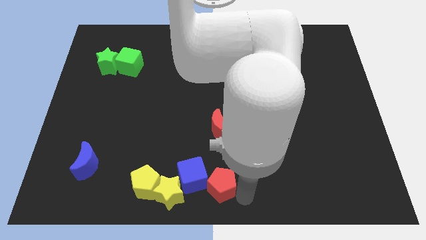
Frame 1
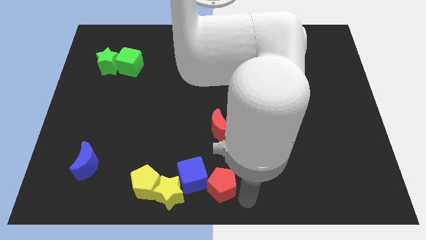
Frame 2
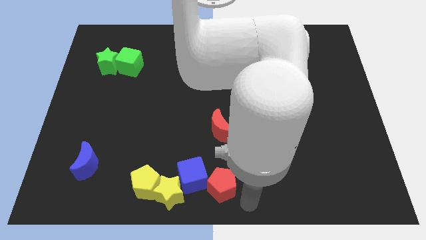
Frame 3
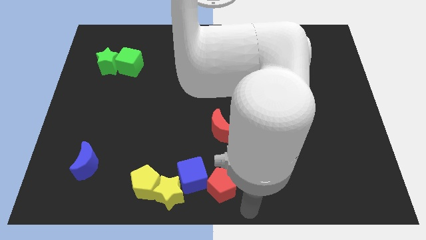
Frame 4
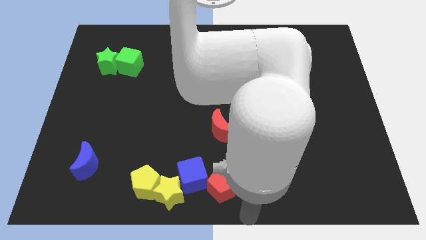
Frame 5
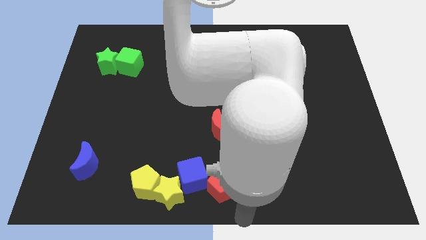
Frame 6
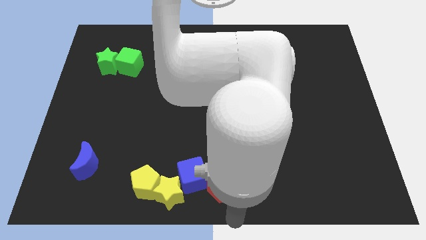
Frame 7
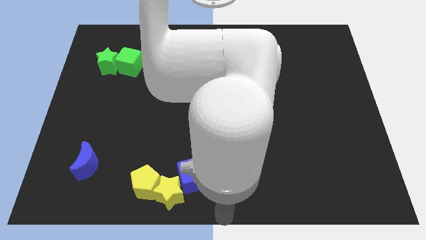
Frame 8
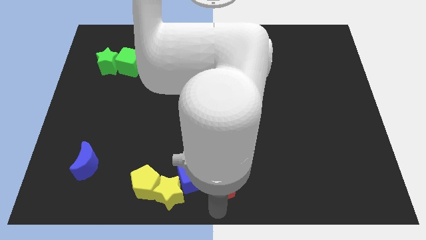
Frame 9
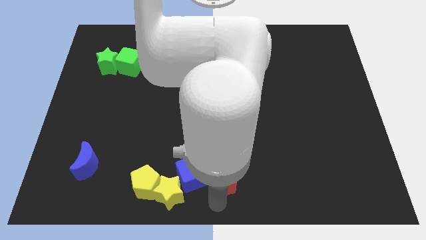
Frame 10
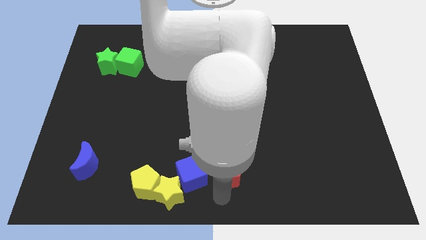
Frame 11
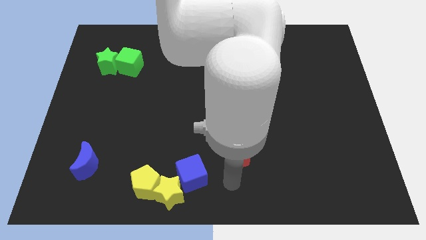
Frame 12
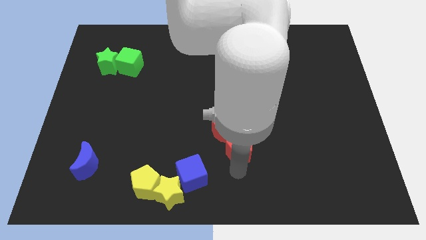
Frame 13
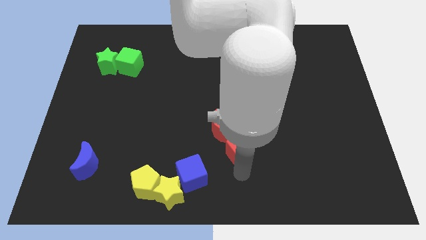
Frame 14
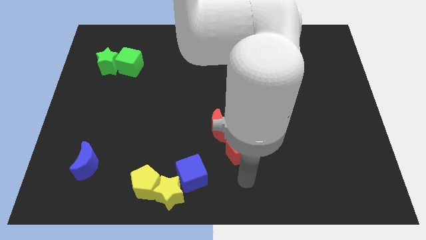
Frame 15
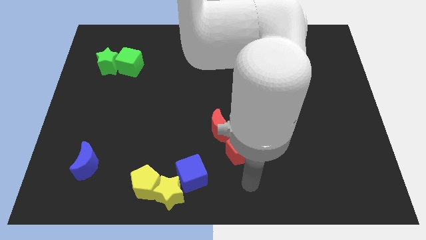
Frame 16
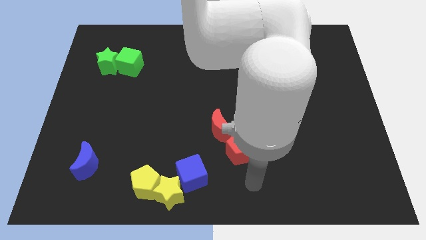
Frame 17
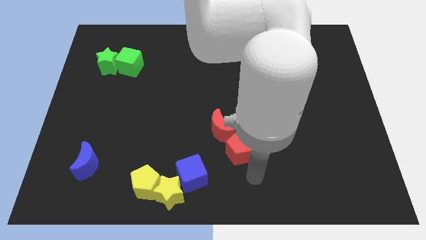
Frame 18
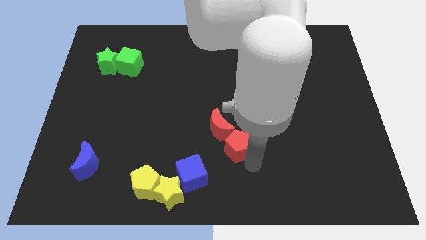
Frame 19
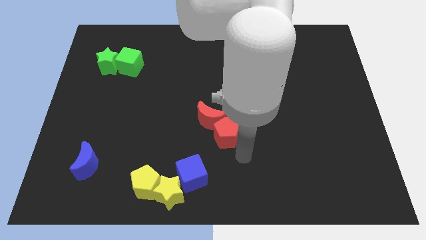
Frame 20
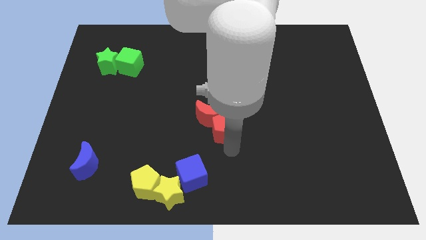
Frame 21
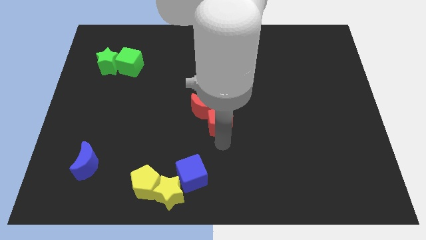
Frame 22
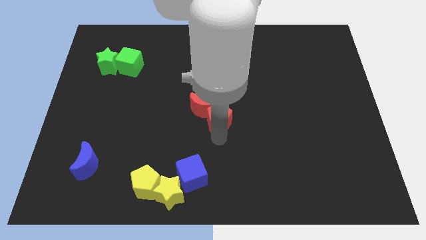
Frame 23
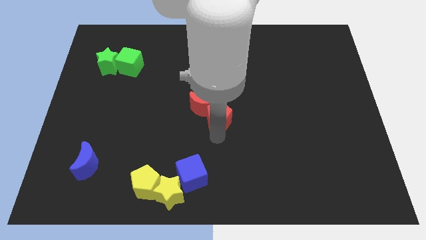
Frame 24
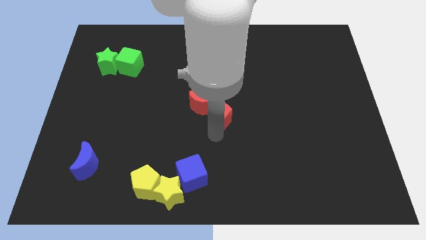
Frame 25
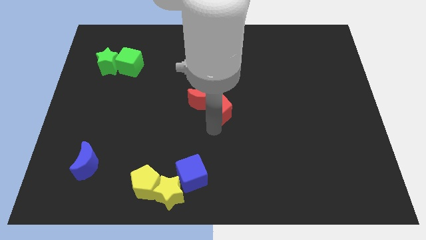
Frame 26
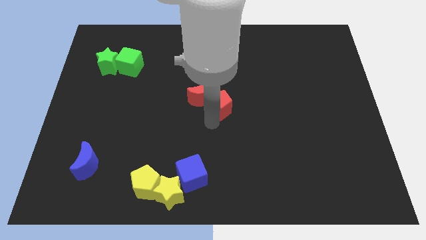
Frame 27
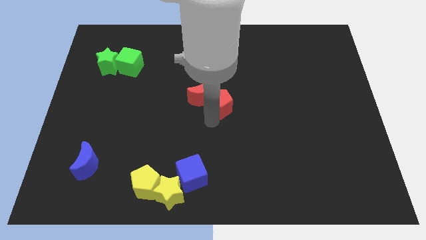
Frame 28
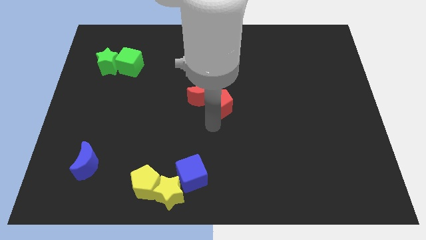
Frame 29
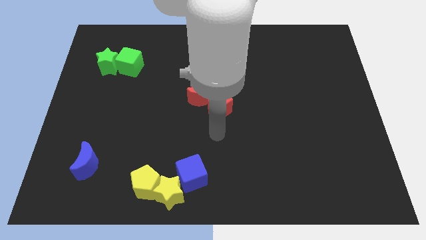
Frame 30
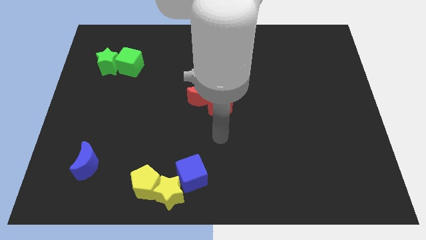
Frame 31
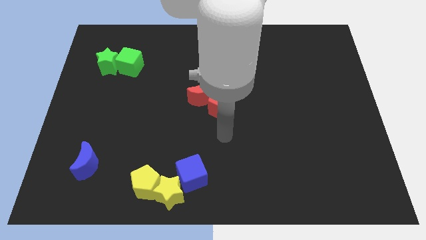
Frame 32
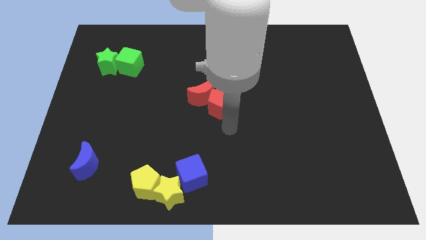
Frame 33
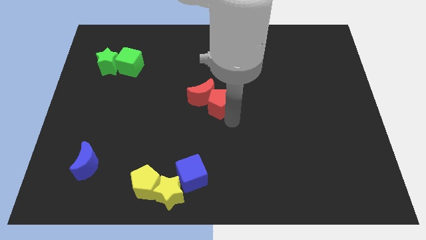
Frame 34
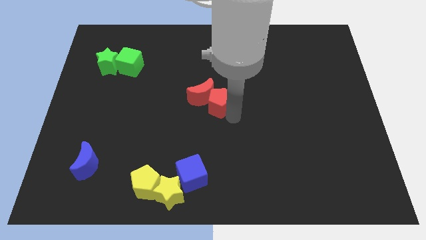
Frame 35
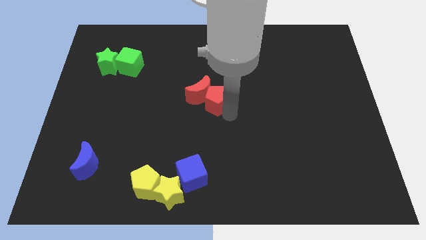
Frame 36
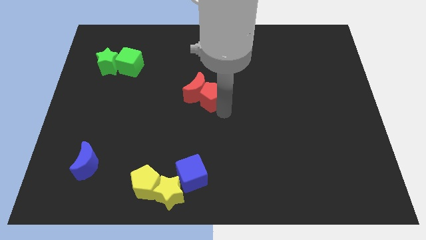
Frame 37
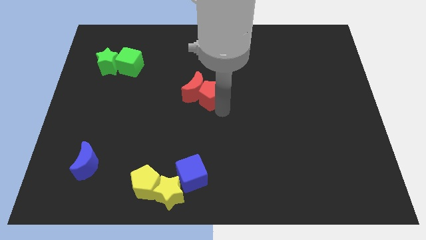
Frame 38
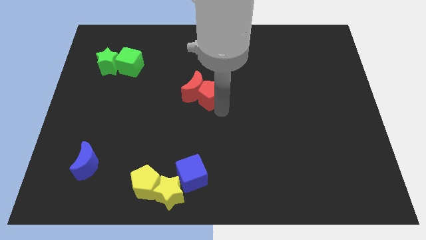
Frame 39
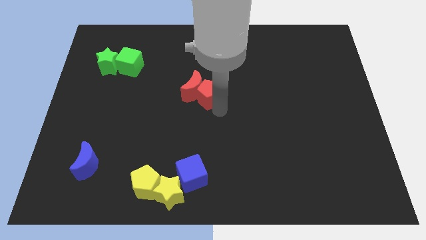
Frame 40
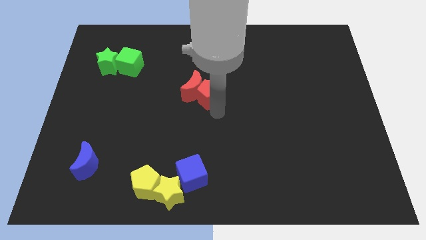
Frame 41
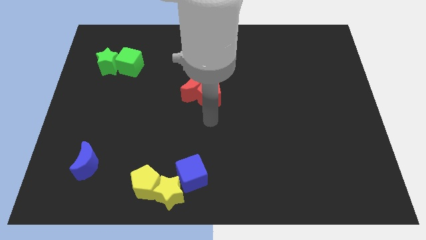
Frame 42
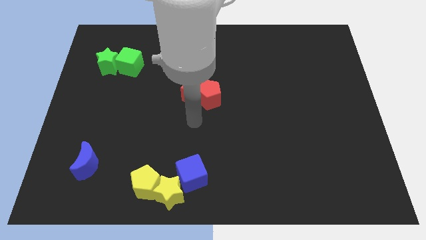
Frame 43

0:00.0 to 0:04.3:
push the red pentagone into the red crescent towards the center of the board

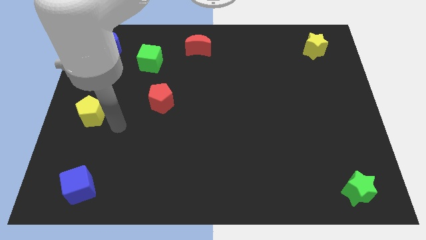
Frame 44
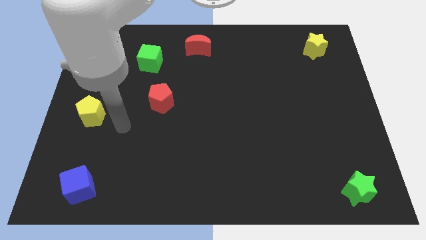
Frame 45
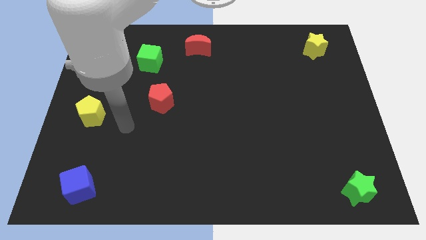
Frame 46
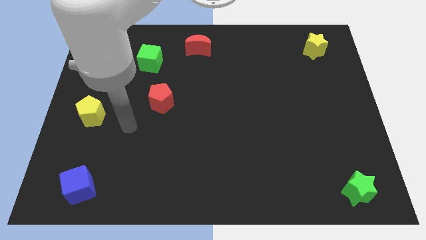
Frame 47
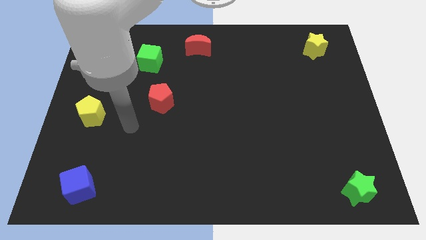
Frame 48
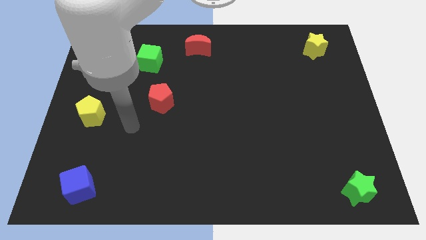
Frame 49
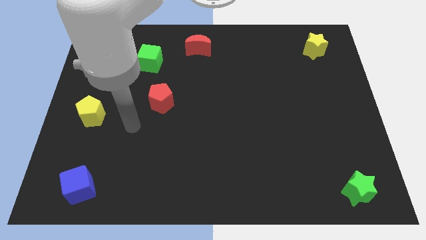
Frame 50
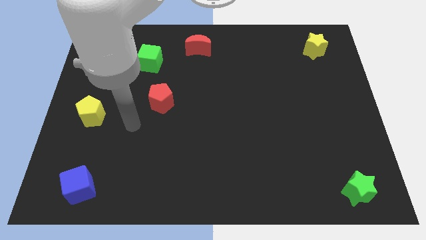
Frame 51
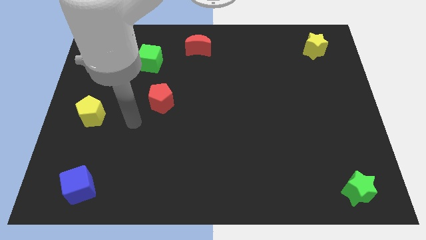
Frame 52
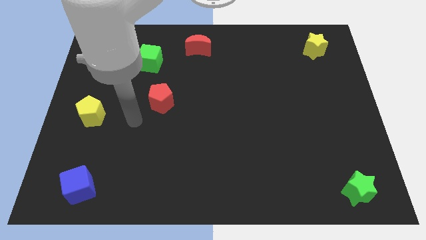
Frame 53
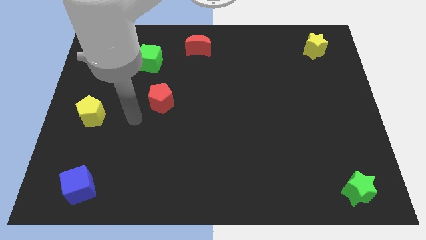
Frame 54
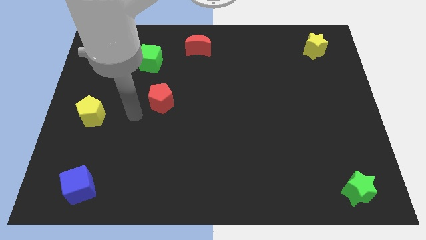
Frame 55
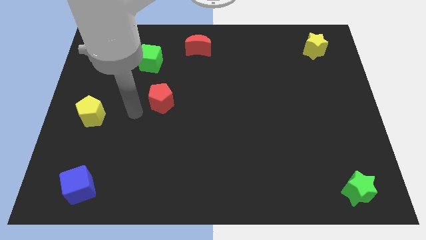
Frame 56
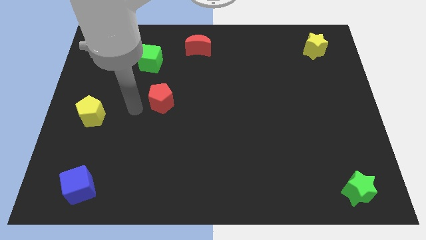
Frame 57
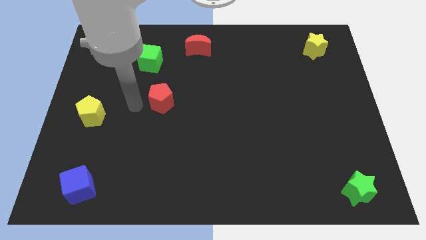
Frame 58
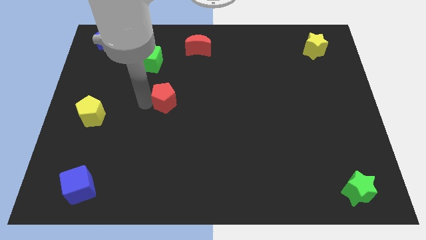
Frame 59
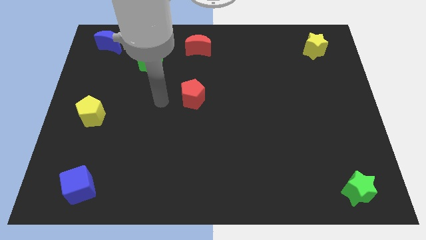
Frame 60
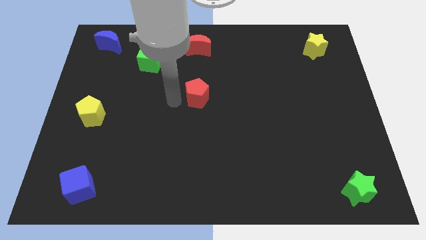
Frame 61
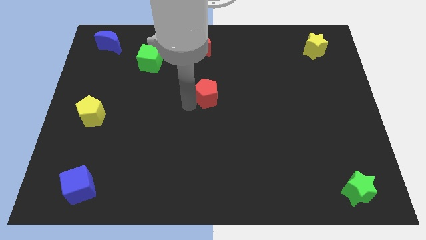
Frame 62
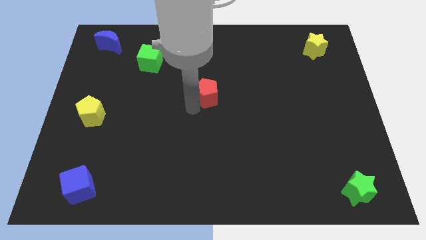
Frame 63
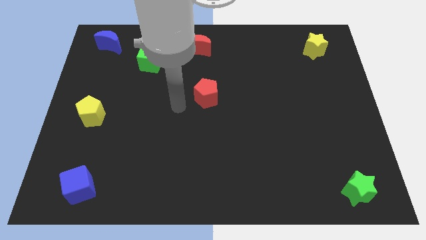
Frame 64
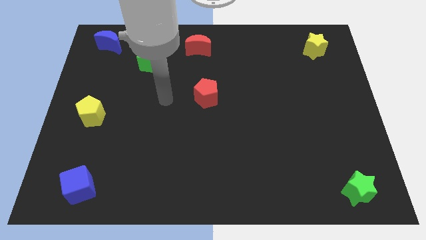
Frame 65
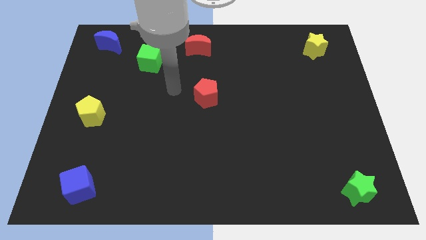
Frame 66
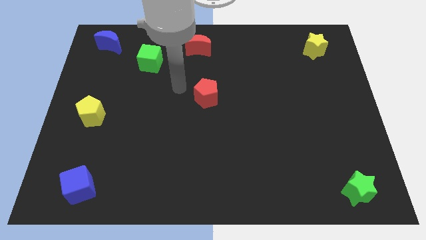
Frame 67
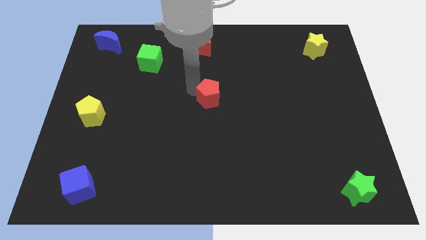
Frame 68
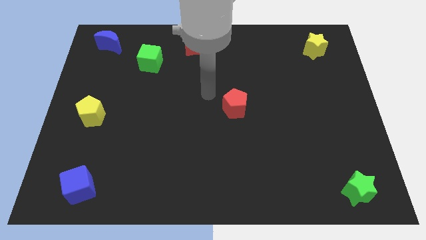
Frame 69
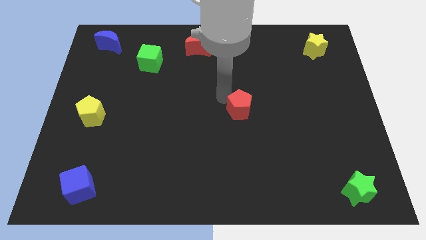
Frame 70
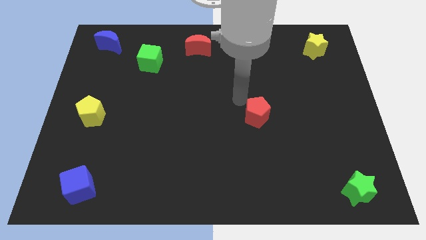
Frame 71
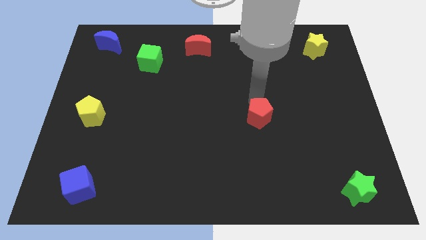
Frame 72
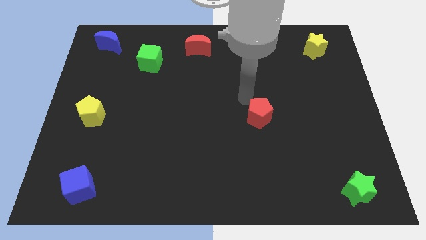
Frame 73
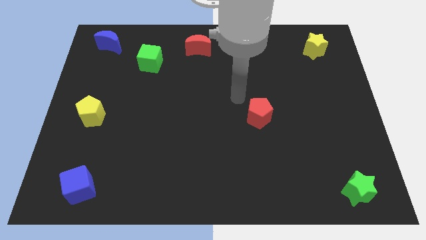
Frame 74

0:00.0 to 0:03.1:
move the red pentagon to the right side

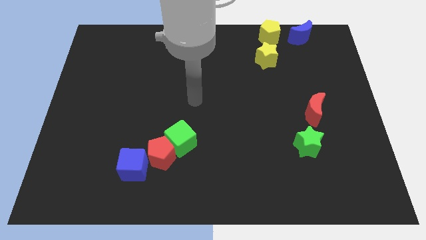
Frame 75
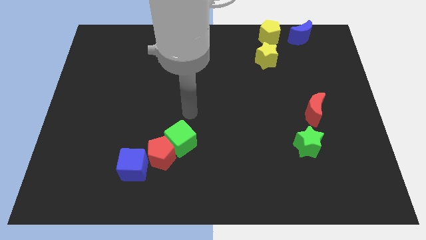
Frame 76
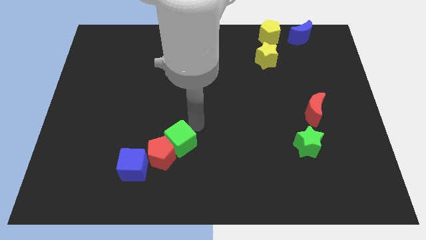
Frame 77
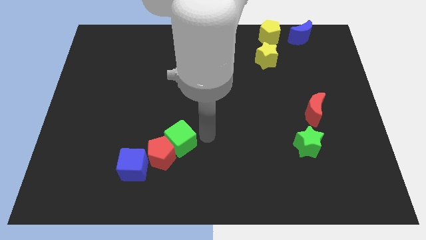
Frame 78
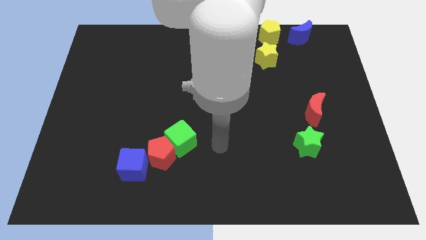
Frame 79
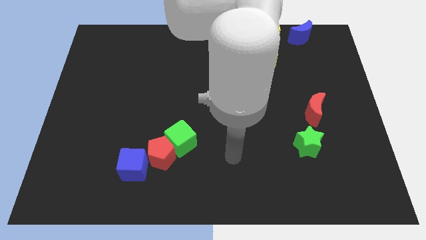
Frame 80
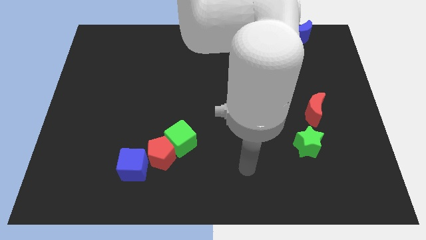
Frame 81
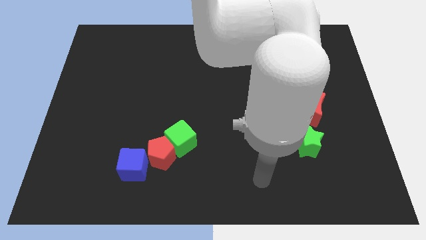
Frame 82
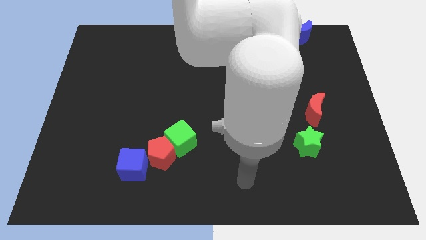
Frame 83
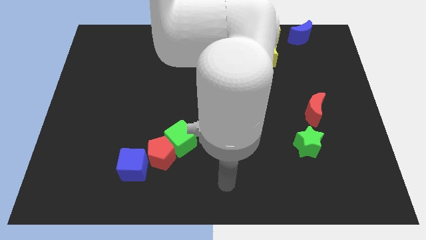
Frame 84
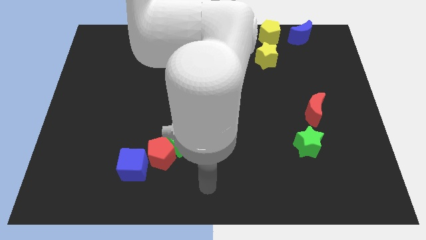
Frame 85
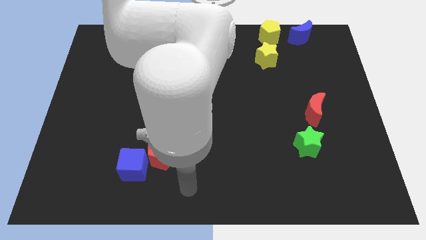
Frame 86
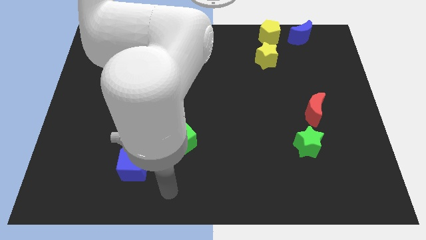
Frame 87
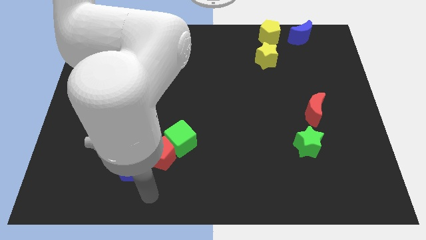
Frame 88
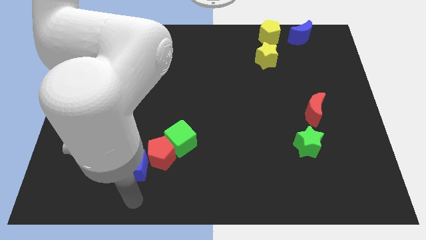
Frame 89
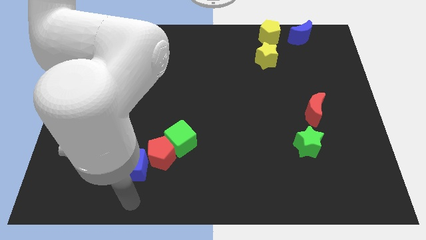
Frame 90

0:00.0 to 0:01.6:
drag the pointer to the bottom of the blue cube
